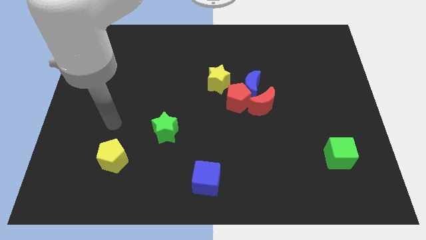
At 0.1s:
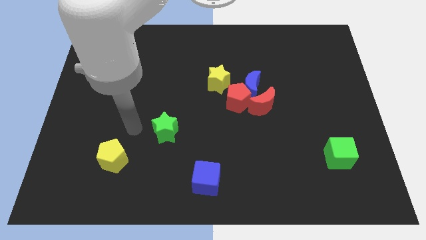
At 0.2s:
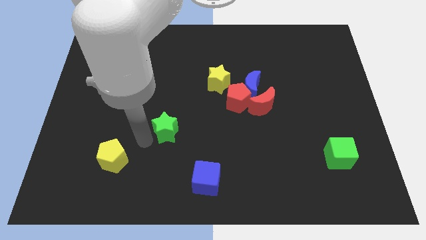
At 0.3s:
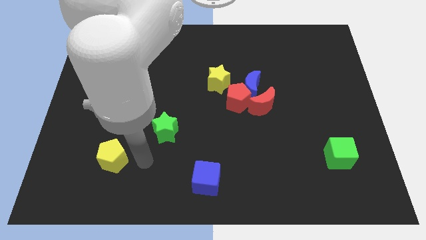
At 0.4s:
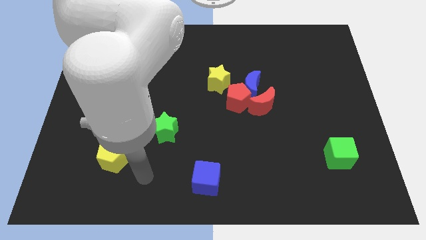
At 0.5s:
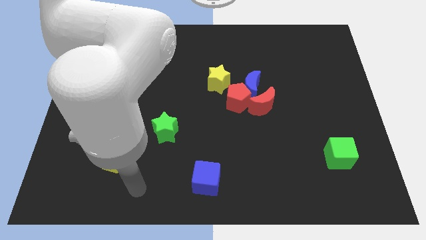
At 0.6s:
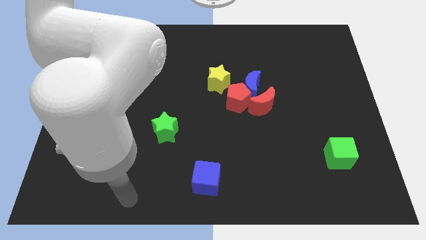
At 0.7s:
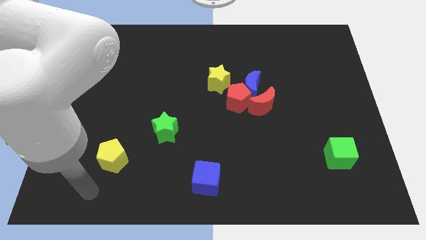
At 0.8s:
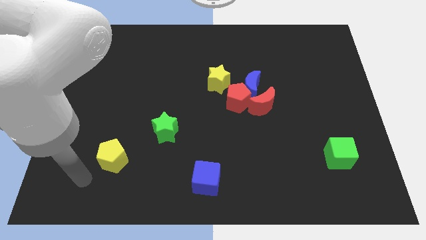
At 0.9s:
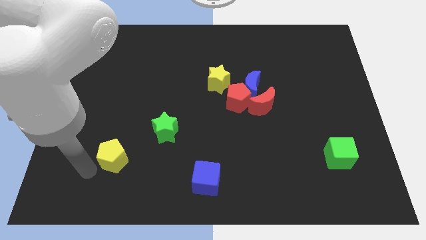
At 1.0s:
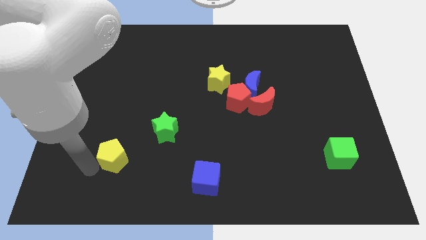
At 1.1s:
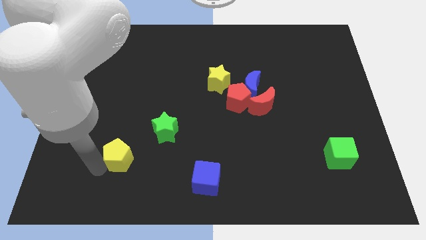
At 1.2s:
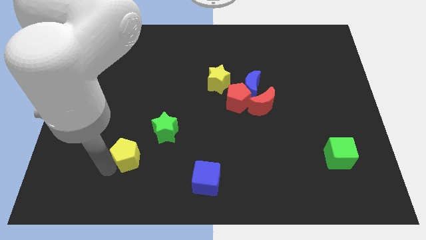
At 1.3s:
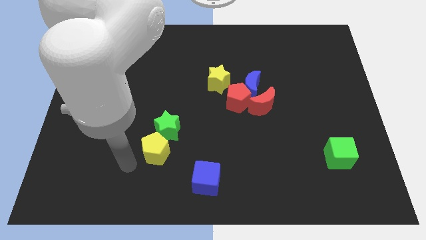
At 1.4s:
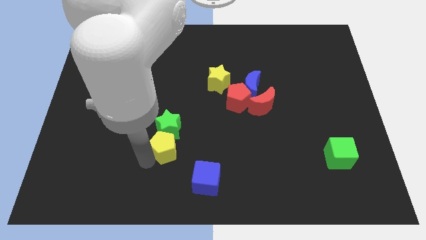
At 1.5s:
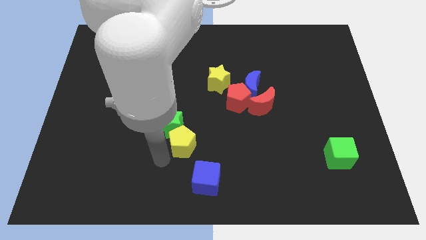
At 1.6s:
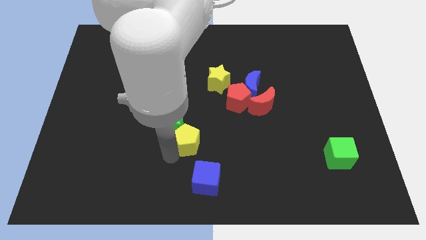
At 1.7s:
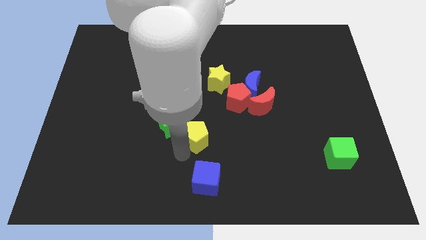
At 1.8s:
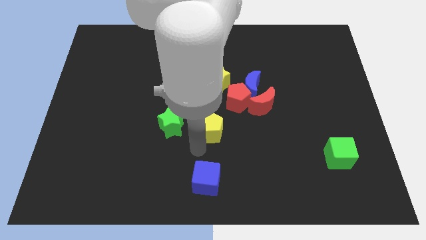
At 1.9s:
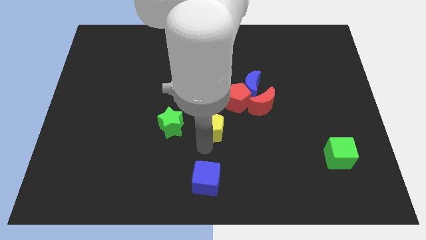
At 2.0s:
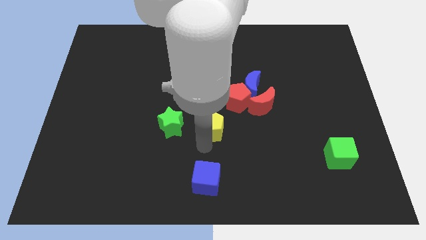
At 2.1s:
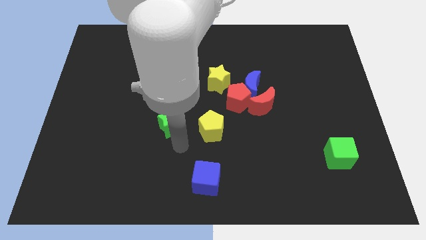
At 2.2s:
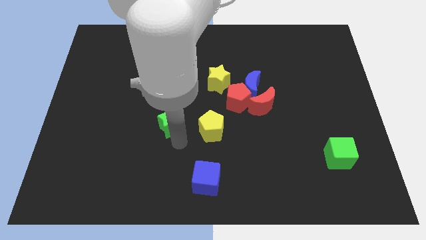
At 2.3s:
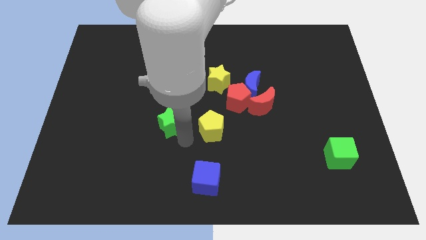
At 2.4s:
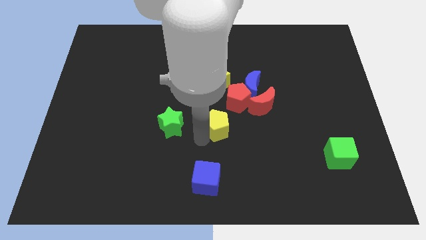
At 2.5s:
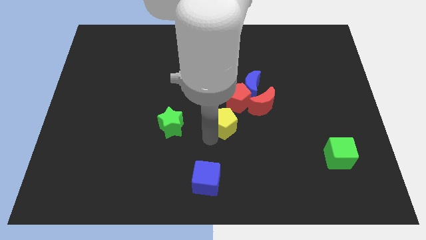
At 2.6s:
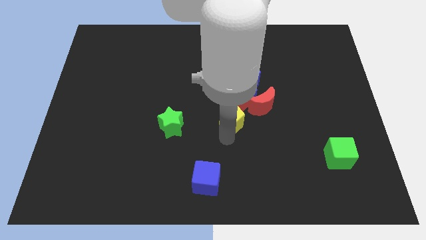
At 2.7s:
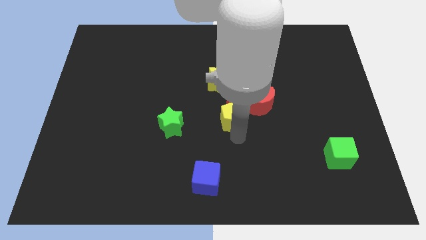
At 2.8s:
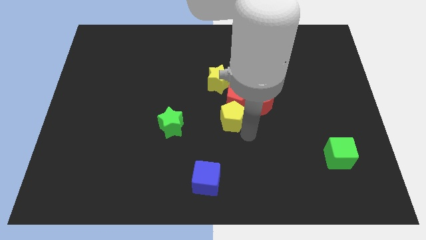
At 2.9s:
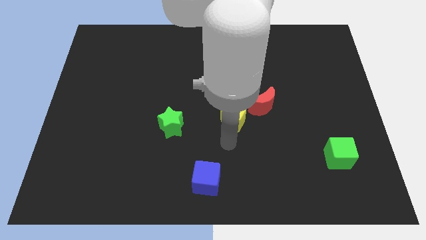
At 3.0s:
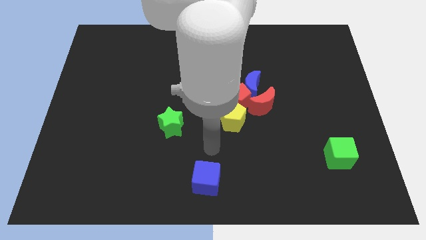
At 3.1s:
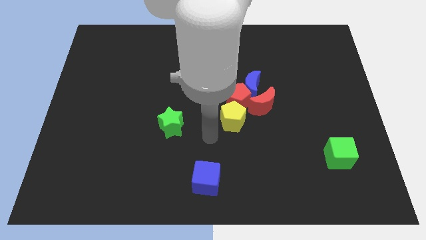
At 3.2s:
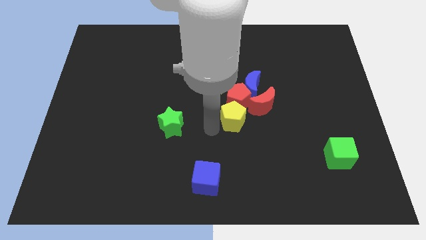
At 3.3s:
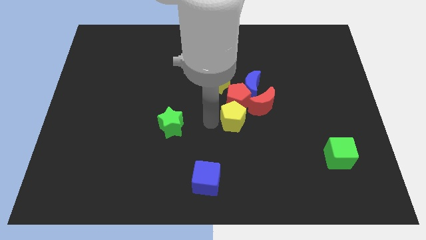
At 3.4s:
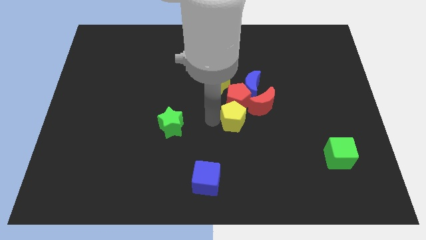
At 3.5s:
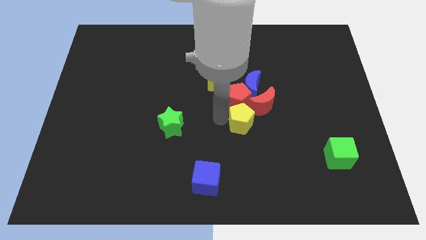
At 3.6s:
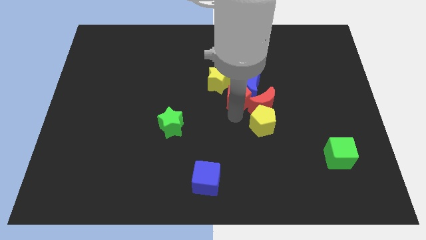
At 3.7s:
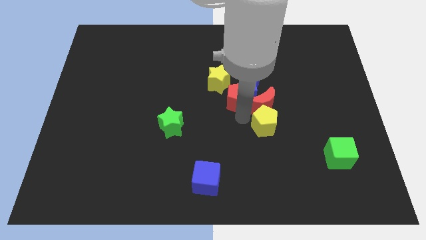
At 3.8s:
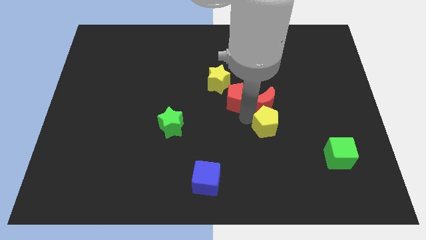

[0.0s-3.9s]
slide the yellow pentagon next to the red moon

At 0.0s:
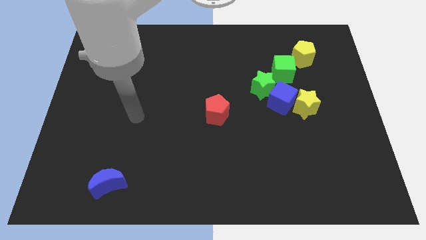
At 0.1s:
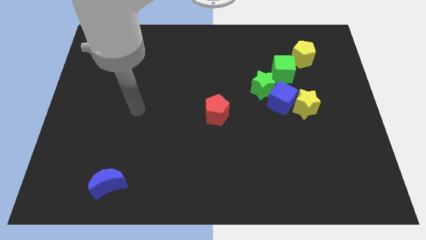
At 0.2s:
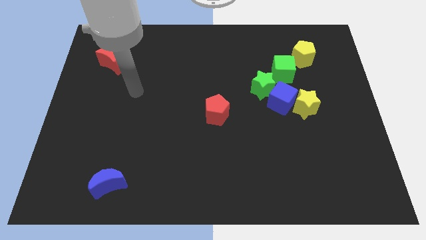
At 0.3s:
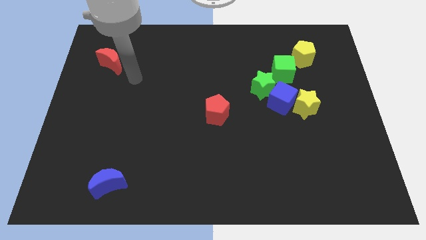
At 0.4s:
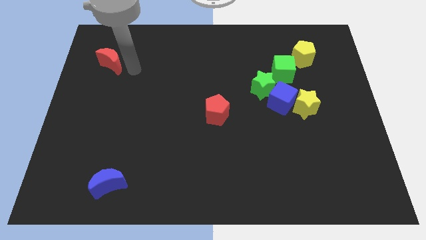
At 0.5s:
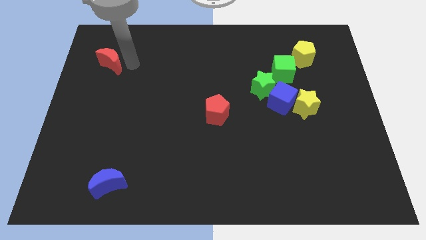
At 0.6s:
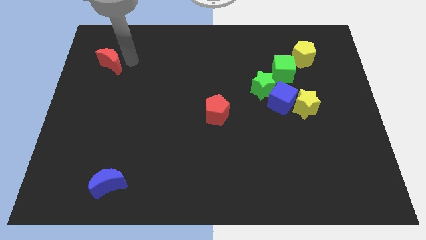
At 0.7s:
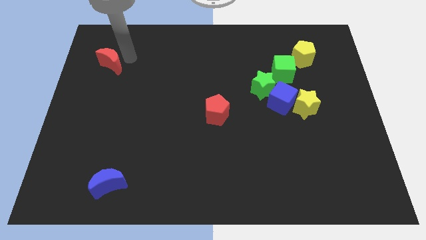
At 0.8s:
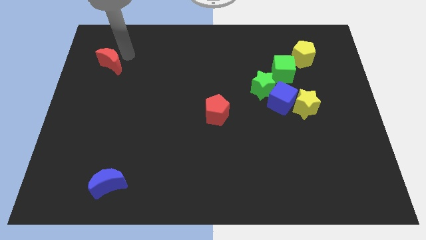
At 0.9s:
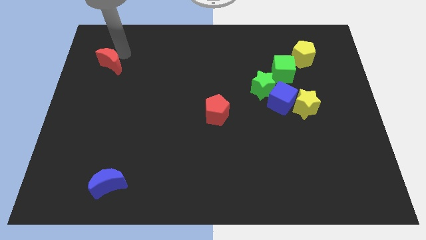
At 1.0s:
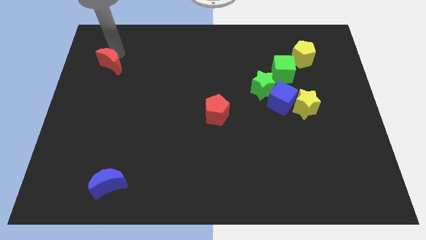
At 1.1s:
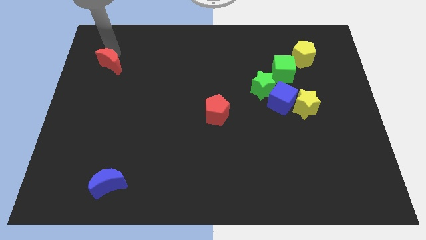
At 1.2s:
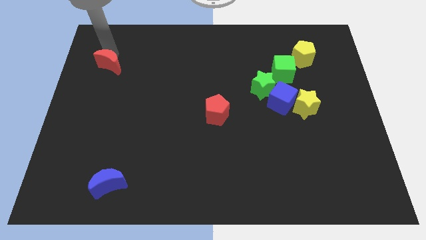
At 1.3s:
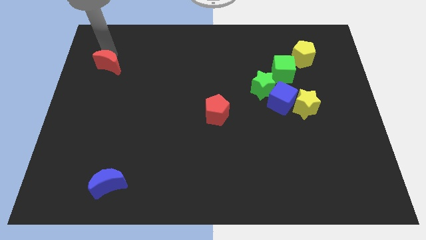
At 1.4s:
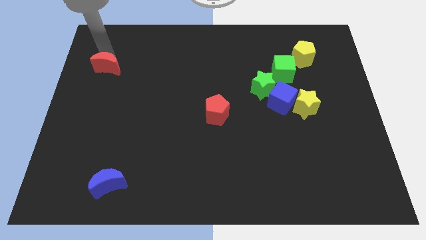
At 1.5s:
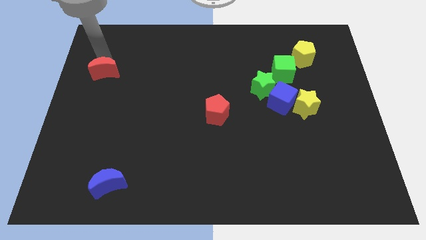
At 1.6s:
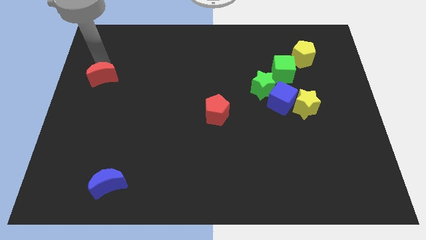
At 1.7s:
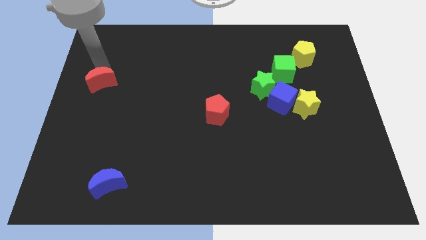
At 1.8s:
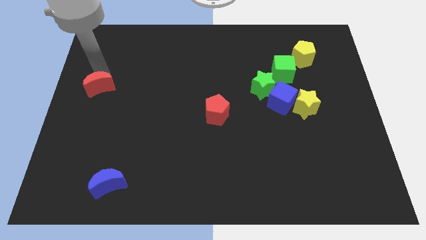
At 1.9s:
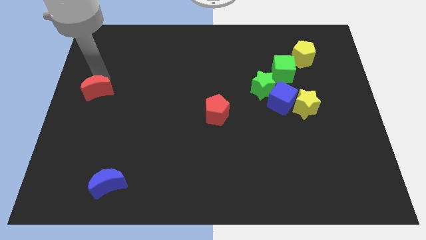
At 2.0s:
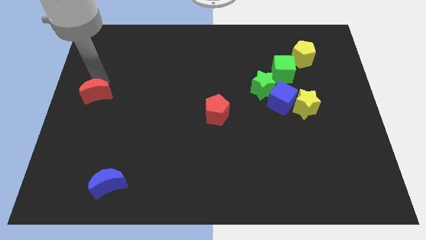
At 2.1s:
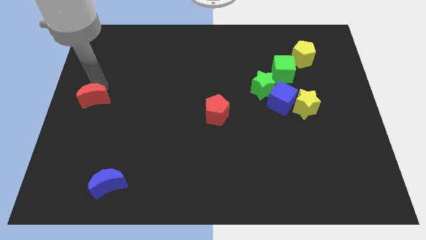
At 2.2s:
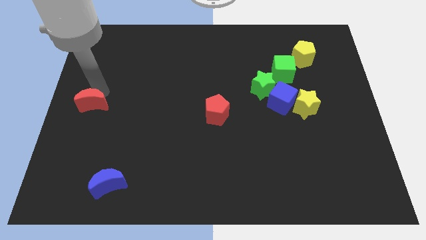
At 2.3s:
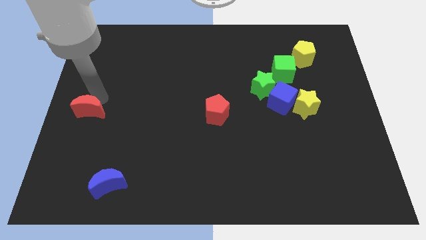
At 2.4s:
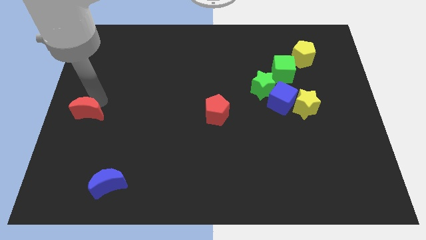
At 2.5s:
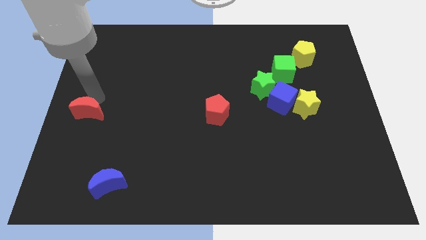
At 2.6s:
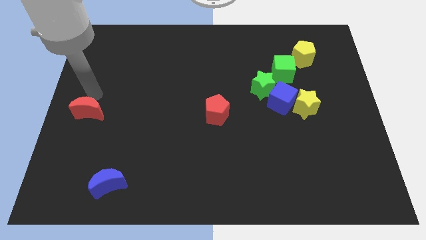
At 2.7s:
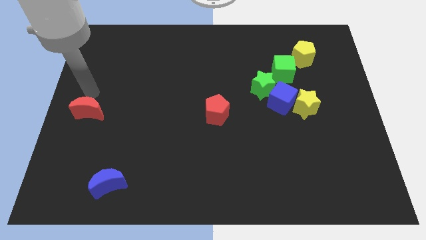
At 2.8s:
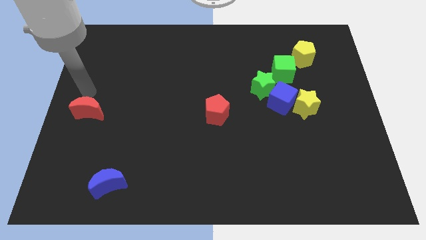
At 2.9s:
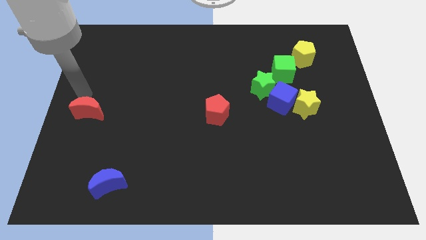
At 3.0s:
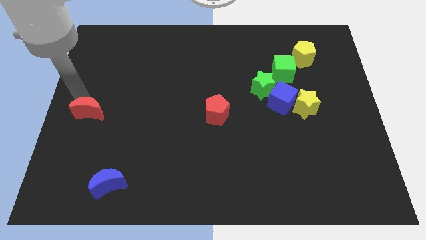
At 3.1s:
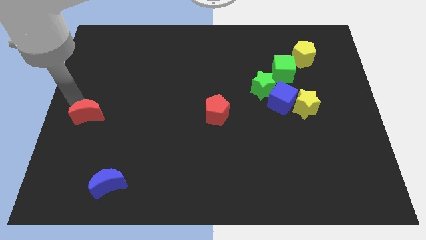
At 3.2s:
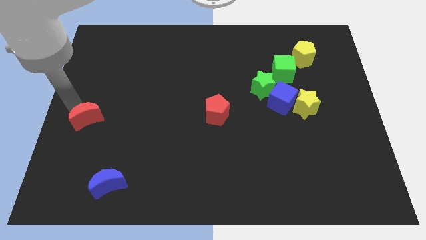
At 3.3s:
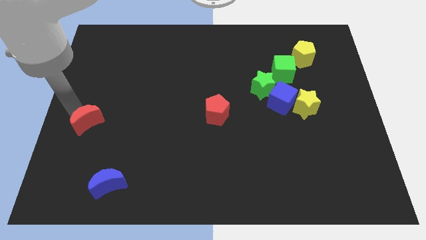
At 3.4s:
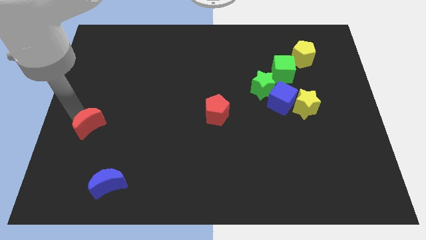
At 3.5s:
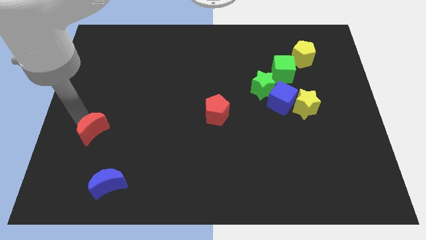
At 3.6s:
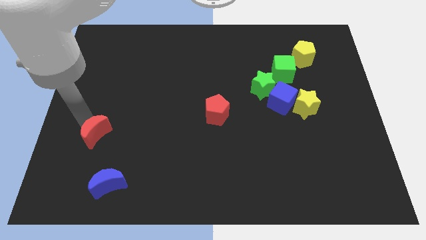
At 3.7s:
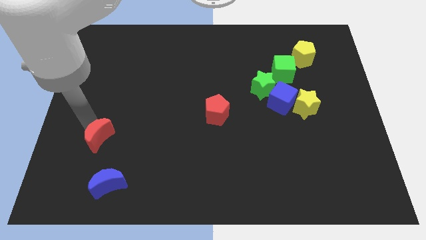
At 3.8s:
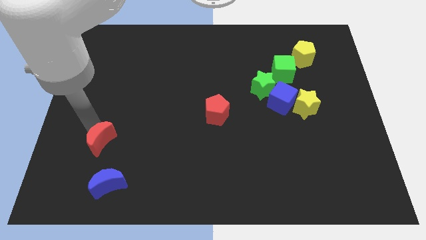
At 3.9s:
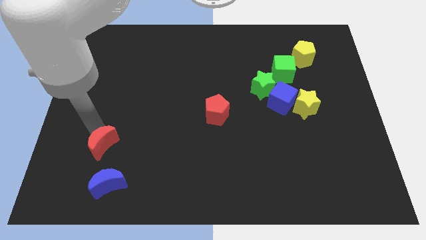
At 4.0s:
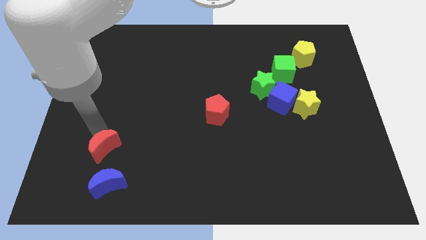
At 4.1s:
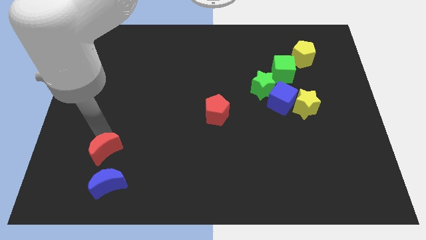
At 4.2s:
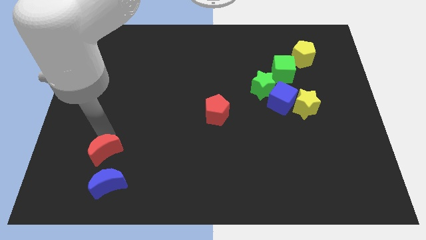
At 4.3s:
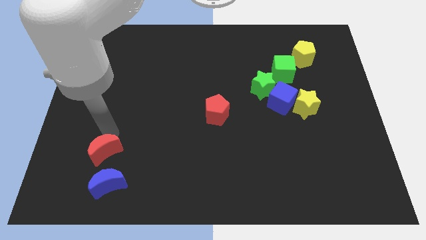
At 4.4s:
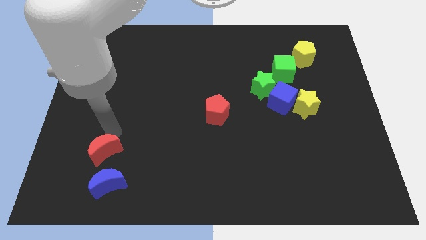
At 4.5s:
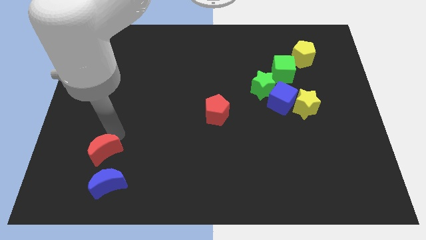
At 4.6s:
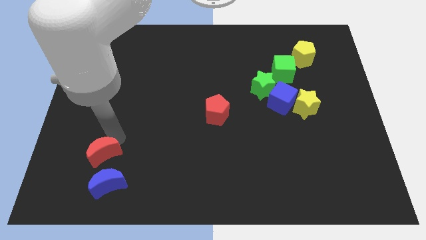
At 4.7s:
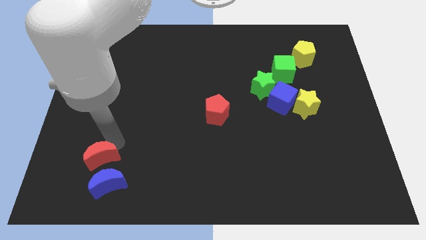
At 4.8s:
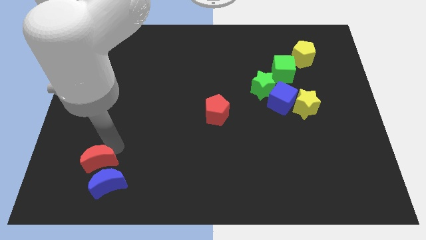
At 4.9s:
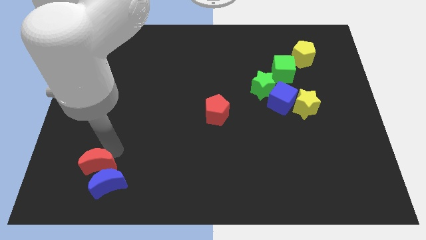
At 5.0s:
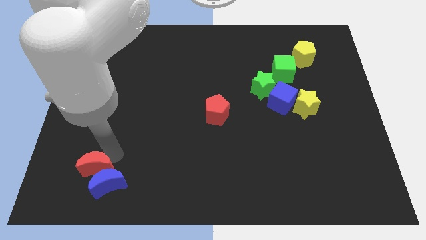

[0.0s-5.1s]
put the red moon close to the blue moon
